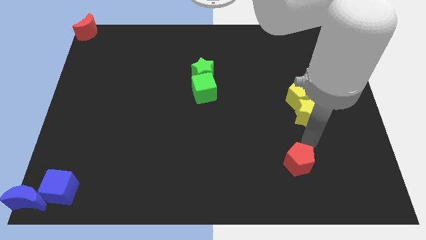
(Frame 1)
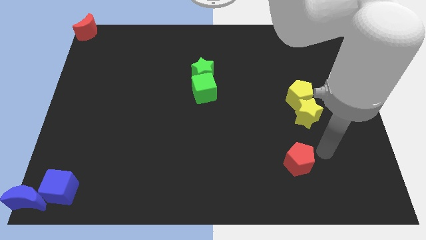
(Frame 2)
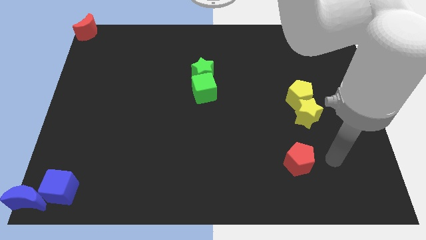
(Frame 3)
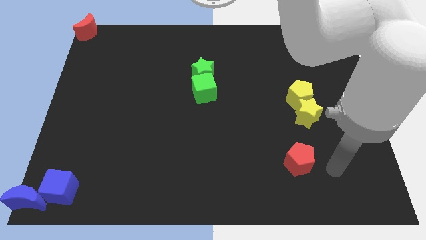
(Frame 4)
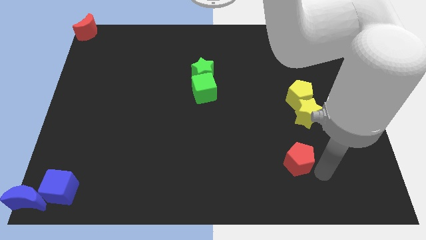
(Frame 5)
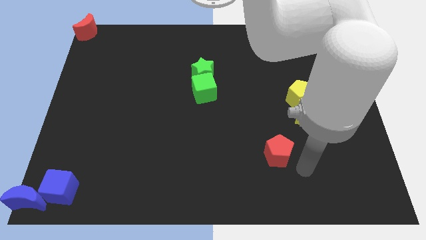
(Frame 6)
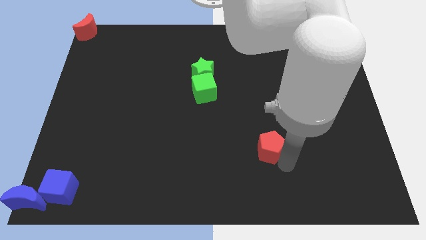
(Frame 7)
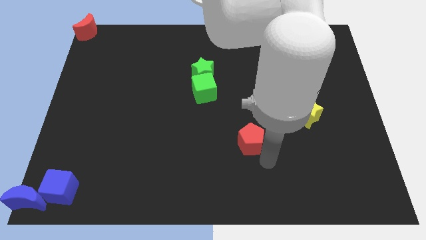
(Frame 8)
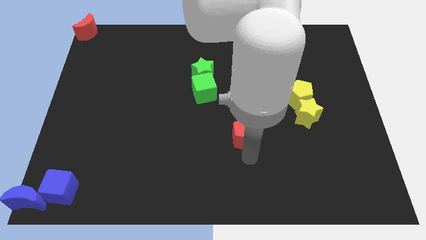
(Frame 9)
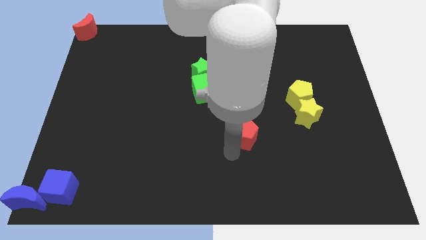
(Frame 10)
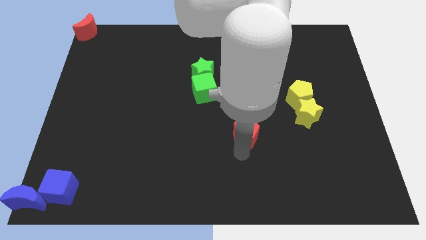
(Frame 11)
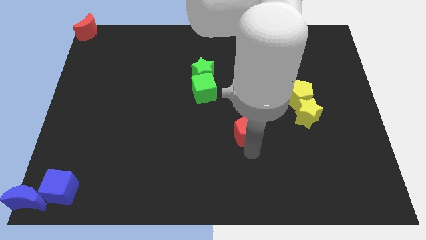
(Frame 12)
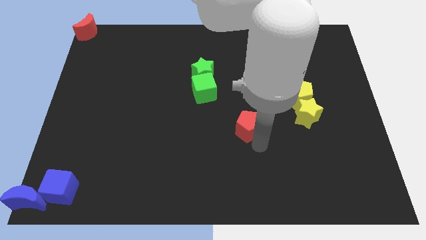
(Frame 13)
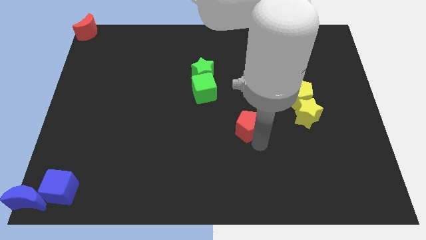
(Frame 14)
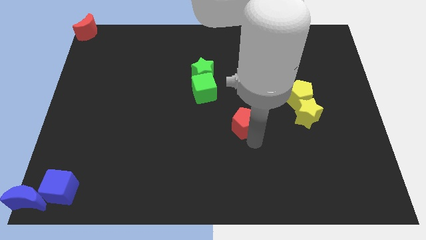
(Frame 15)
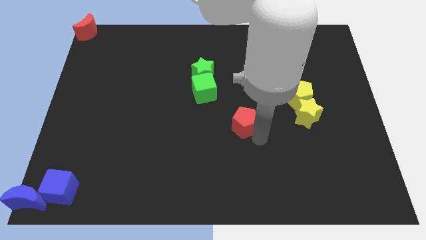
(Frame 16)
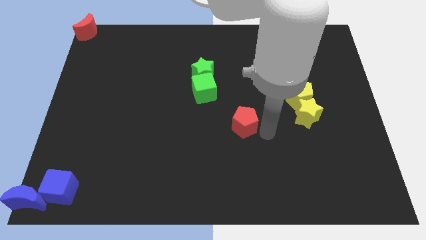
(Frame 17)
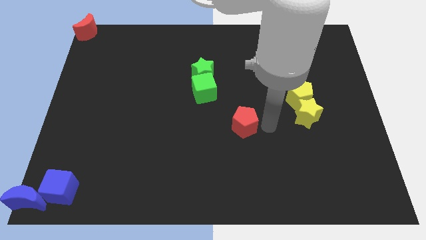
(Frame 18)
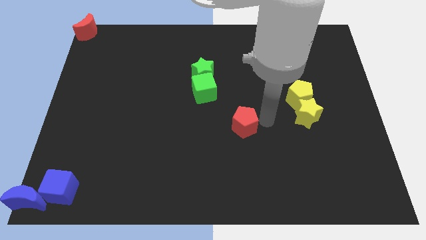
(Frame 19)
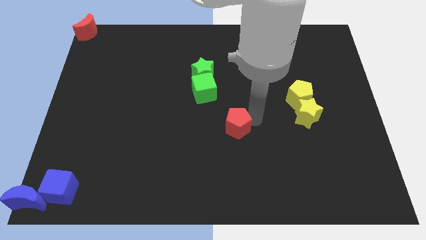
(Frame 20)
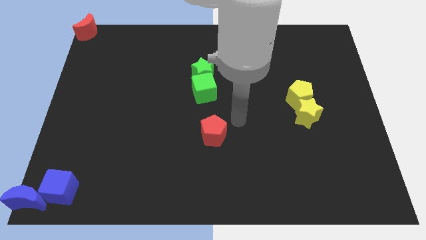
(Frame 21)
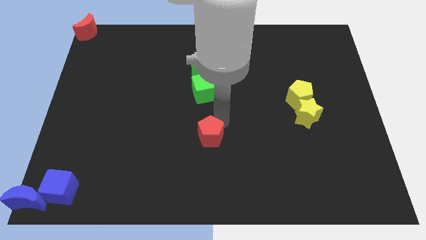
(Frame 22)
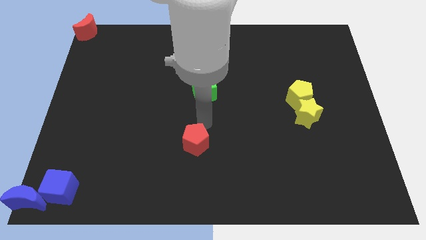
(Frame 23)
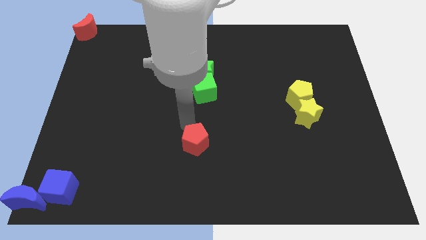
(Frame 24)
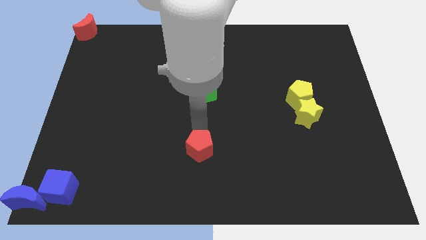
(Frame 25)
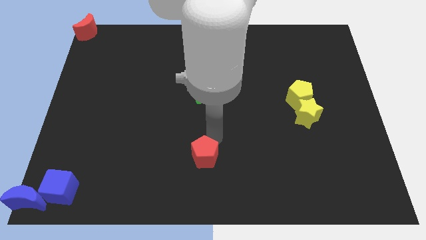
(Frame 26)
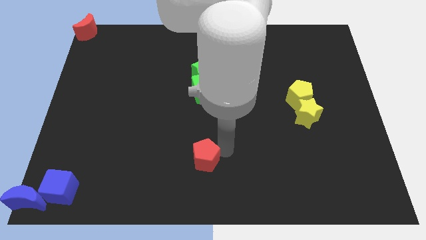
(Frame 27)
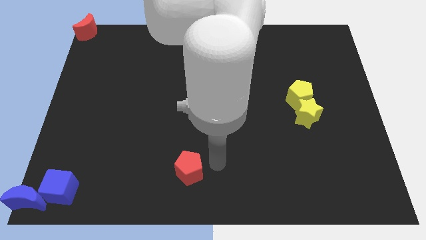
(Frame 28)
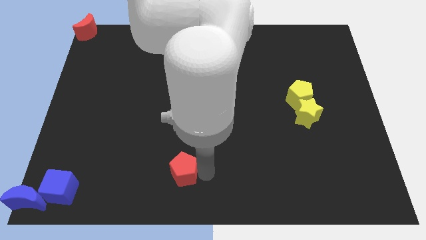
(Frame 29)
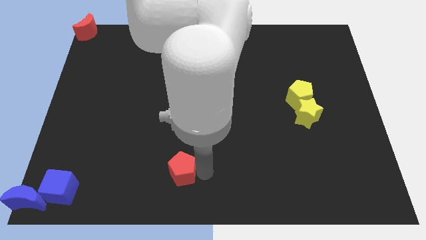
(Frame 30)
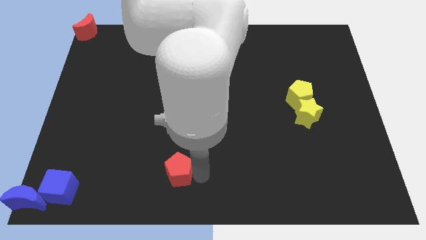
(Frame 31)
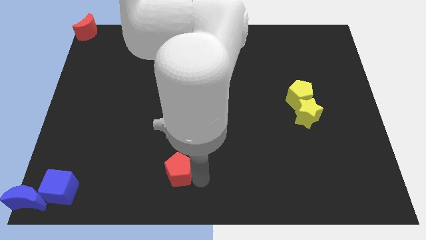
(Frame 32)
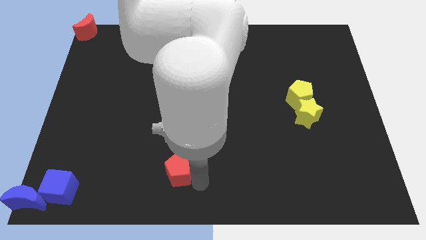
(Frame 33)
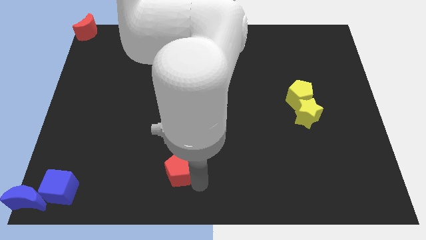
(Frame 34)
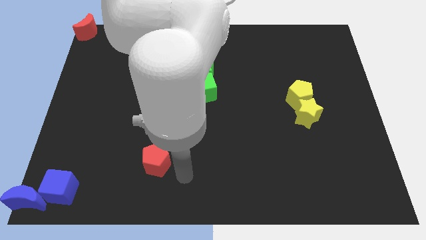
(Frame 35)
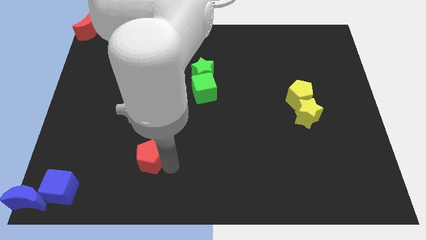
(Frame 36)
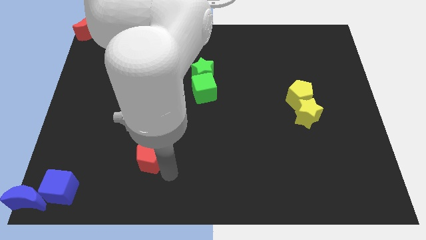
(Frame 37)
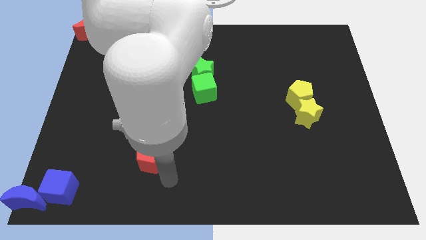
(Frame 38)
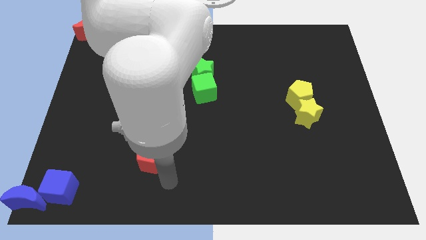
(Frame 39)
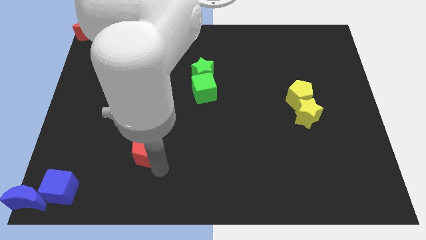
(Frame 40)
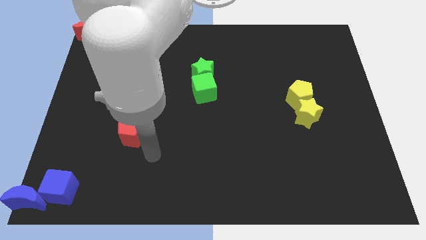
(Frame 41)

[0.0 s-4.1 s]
push the red pentagon diagonally to bottom left of the green cube

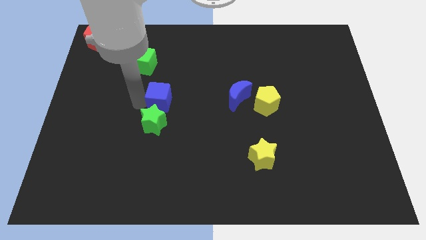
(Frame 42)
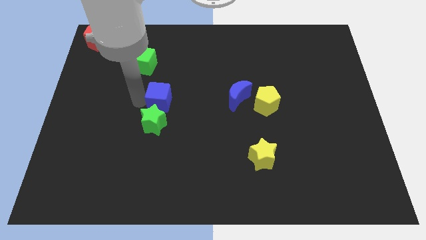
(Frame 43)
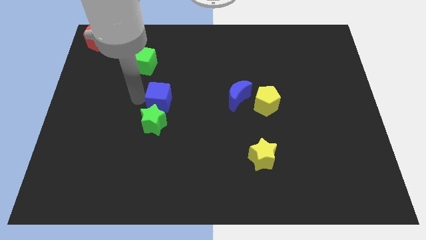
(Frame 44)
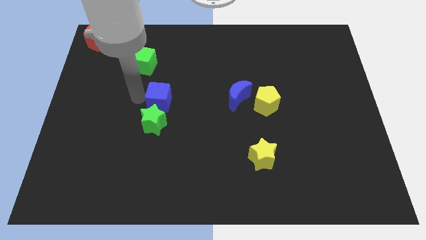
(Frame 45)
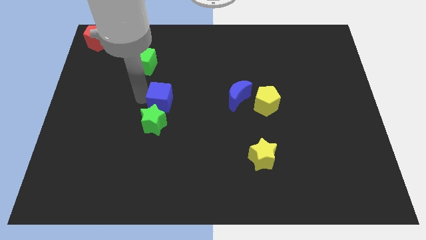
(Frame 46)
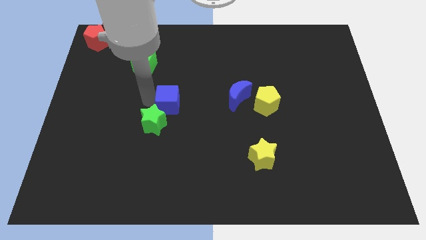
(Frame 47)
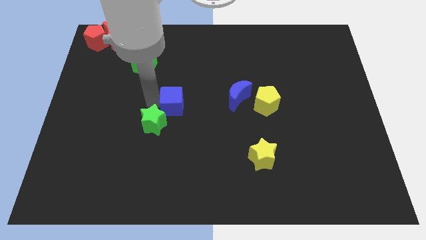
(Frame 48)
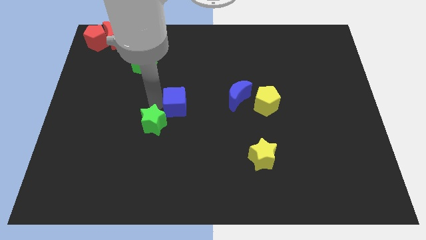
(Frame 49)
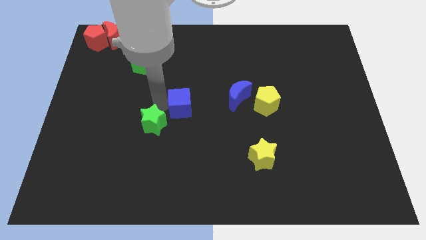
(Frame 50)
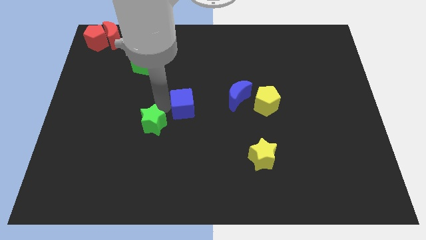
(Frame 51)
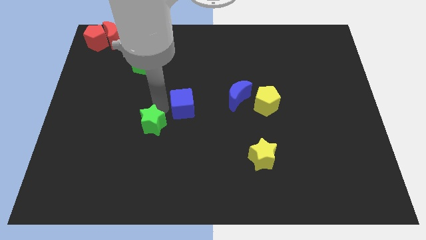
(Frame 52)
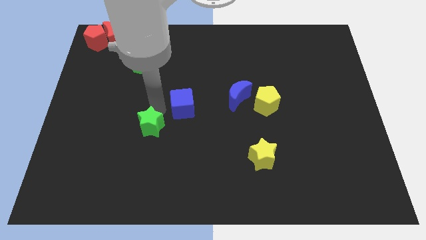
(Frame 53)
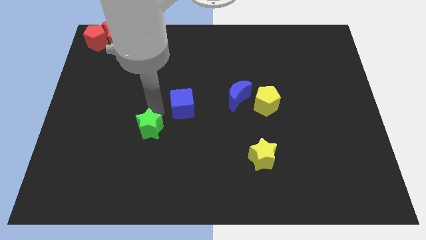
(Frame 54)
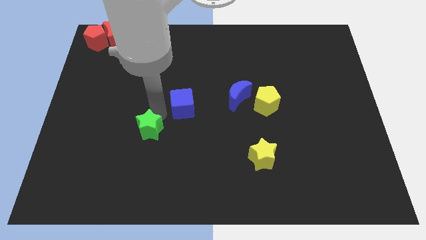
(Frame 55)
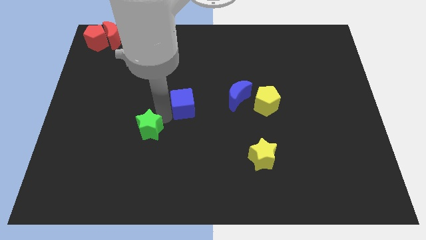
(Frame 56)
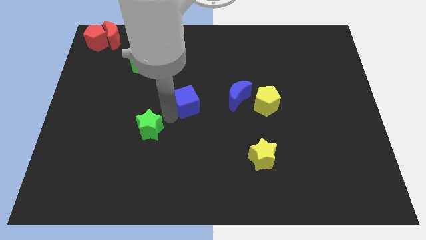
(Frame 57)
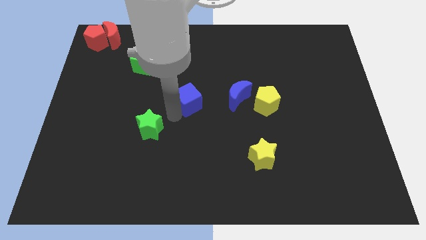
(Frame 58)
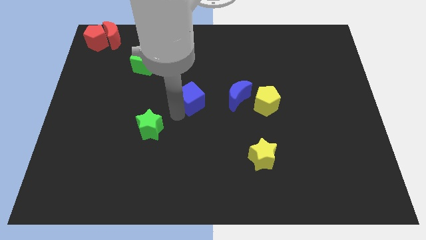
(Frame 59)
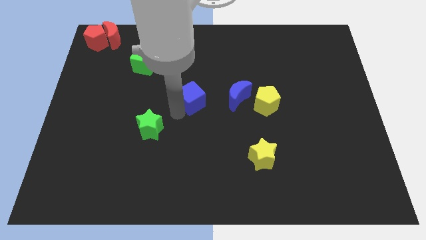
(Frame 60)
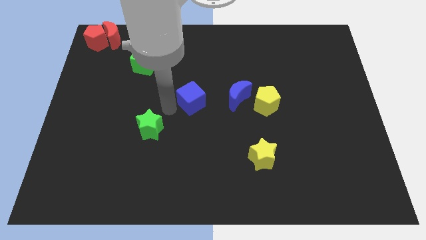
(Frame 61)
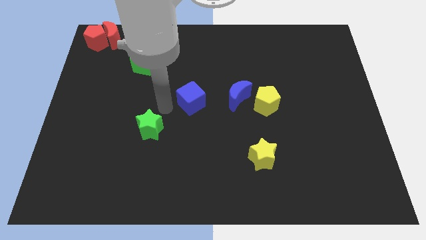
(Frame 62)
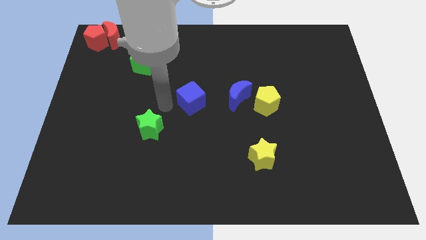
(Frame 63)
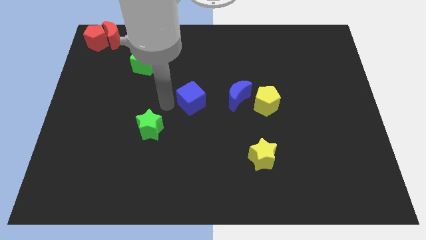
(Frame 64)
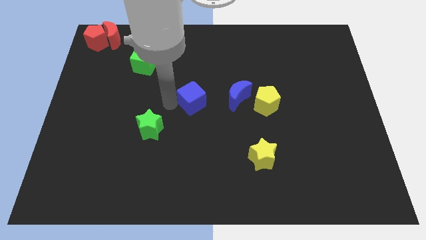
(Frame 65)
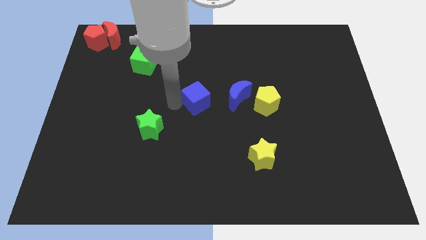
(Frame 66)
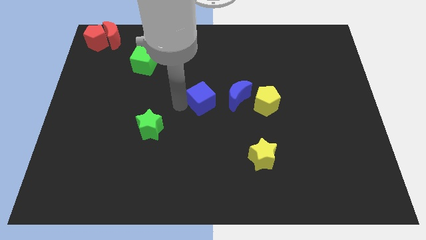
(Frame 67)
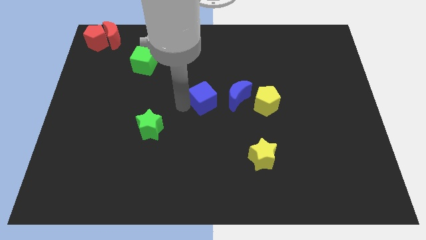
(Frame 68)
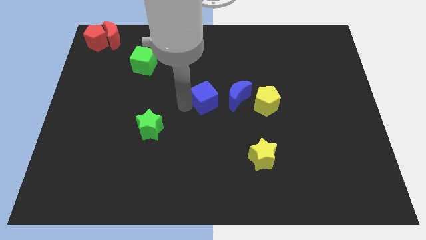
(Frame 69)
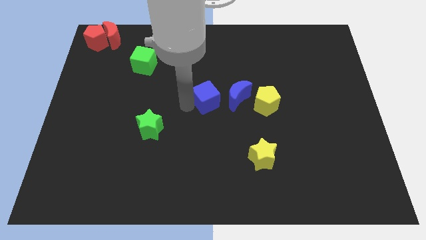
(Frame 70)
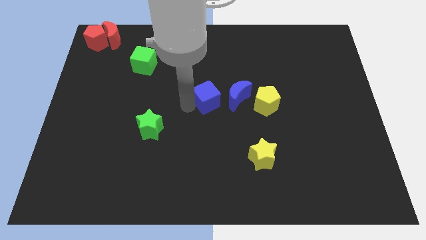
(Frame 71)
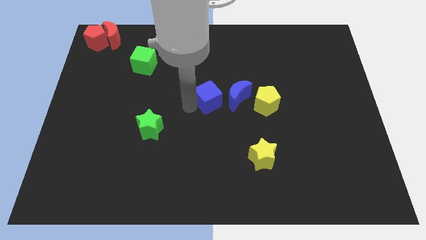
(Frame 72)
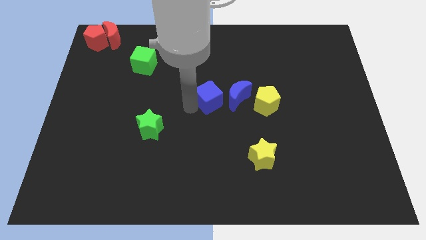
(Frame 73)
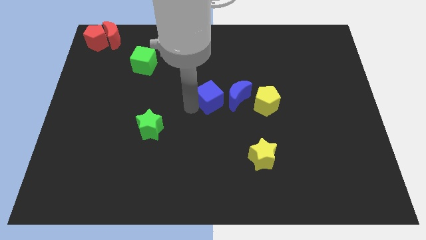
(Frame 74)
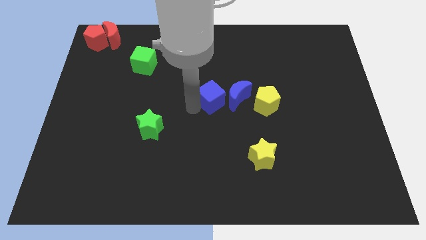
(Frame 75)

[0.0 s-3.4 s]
place the blue cube on the left side of the blue crescent

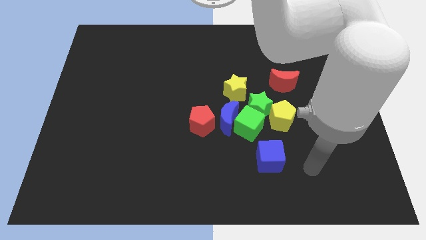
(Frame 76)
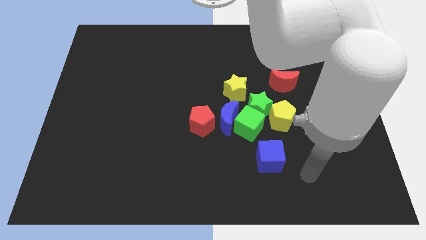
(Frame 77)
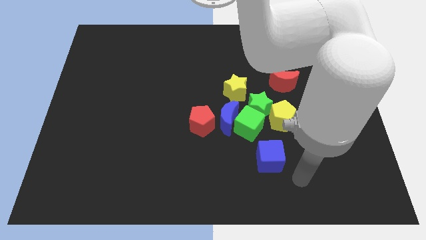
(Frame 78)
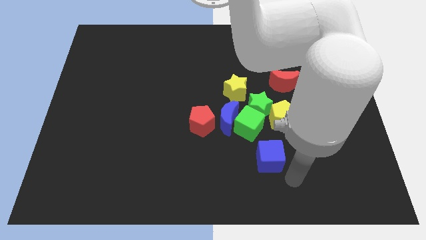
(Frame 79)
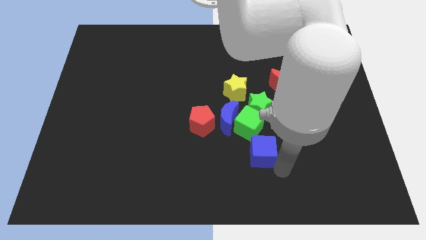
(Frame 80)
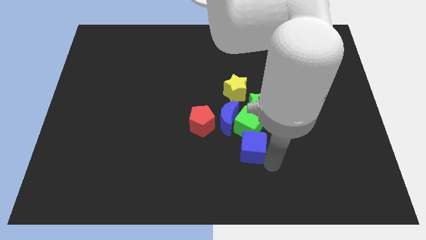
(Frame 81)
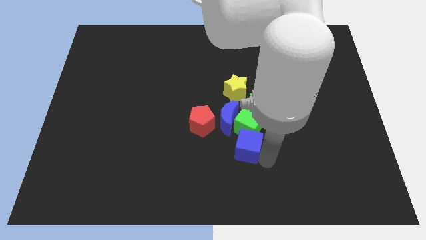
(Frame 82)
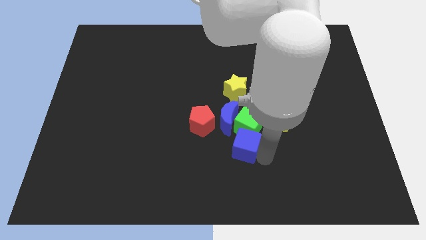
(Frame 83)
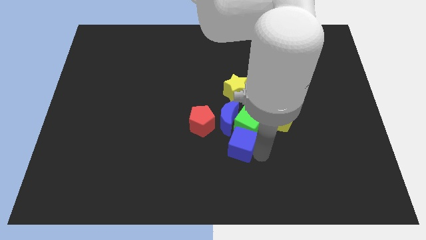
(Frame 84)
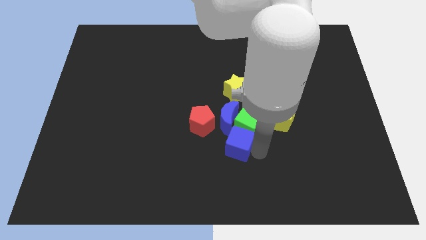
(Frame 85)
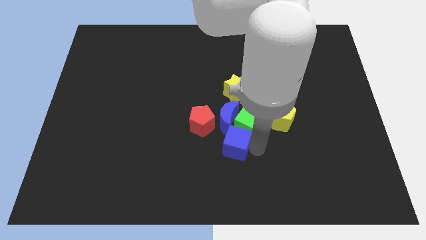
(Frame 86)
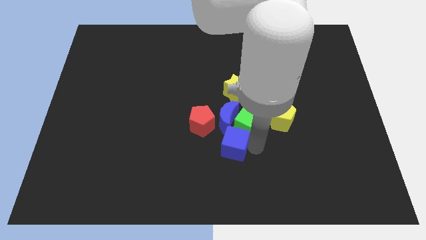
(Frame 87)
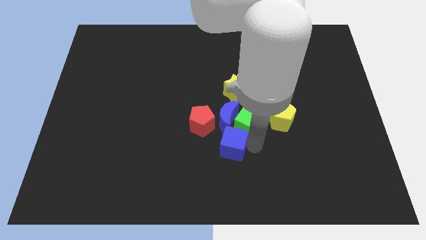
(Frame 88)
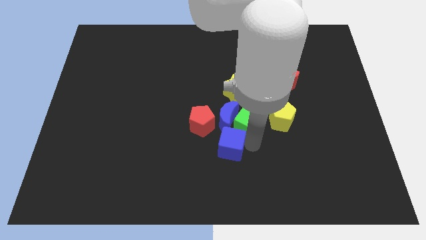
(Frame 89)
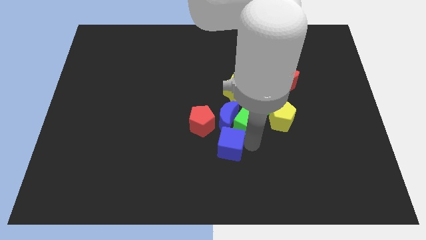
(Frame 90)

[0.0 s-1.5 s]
push the blue cube into blue moon
